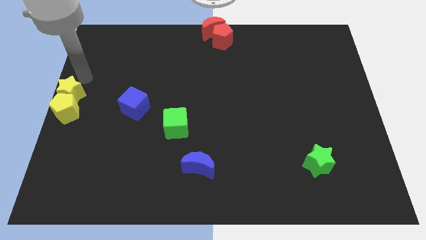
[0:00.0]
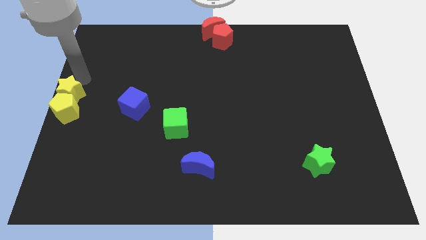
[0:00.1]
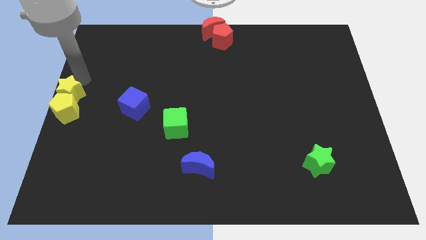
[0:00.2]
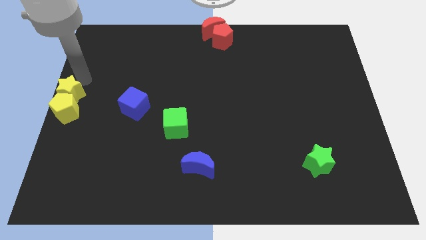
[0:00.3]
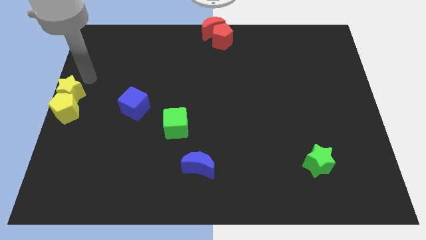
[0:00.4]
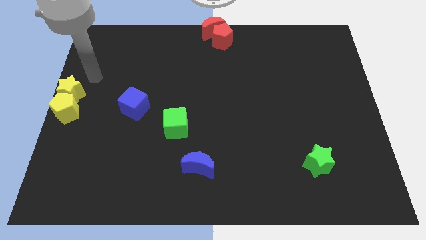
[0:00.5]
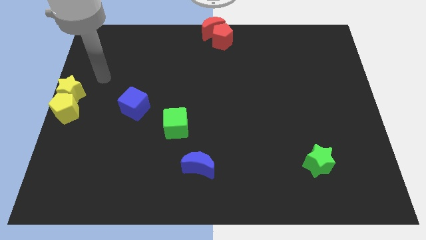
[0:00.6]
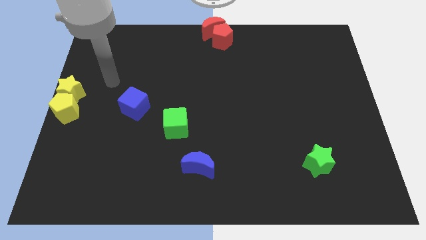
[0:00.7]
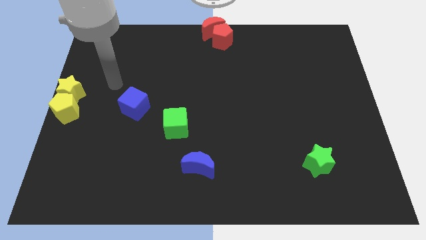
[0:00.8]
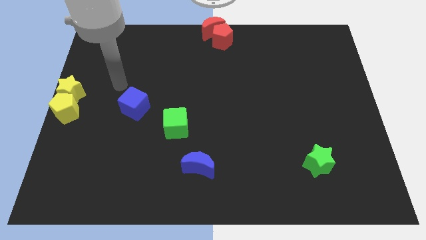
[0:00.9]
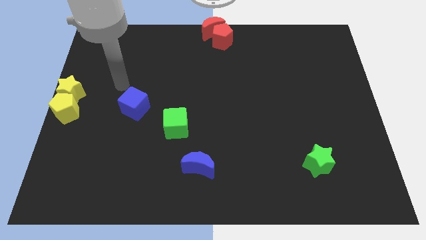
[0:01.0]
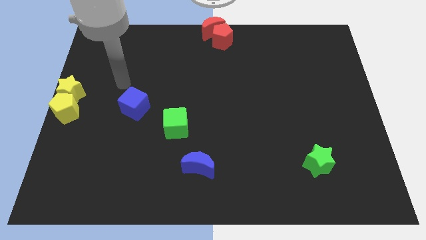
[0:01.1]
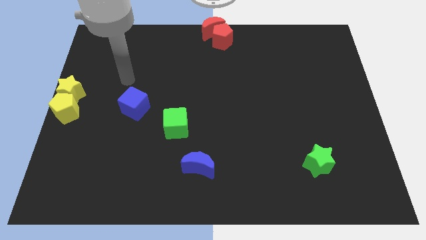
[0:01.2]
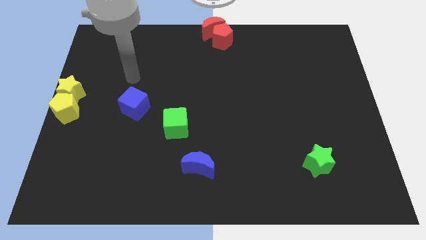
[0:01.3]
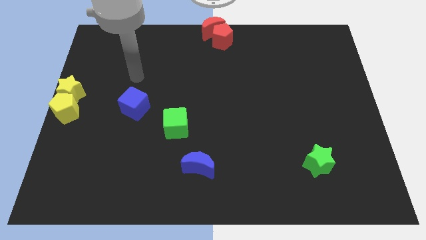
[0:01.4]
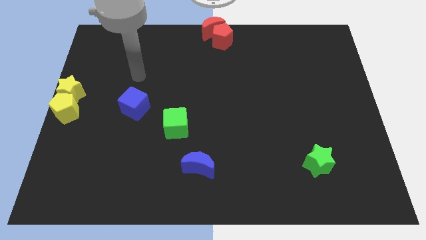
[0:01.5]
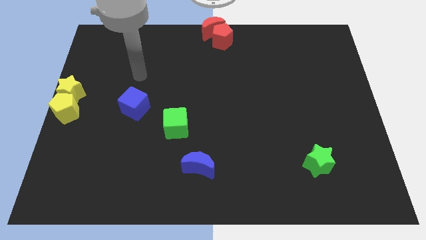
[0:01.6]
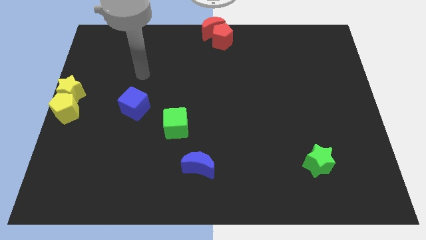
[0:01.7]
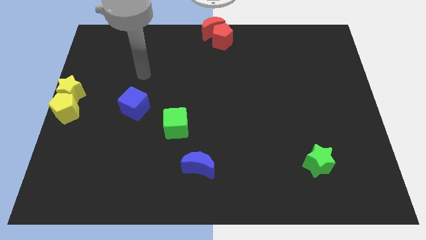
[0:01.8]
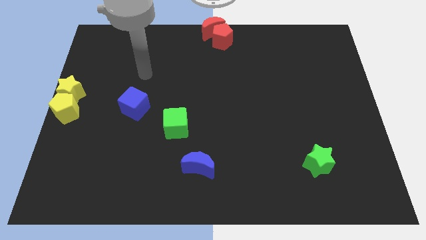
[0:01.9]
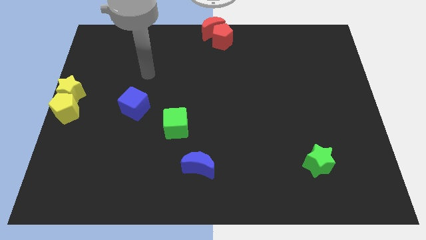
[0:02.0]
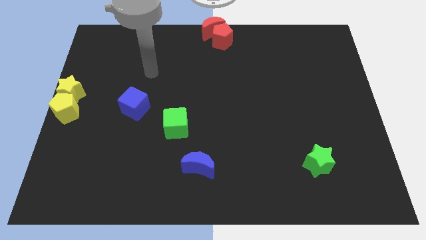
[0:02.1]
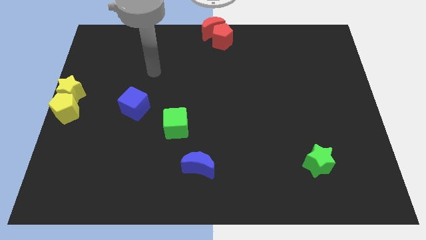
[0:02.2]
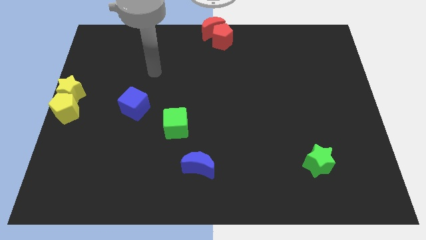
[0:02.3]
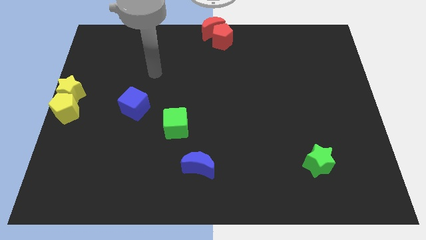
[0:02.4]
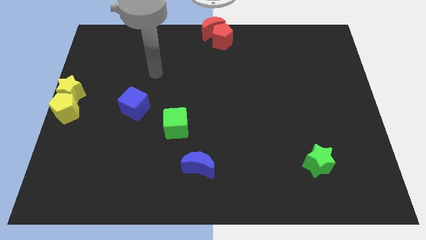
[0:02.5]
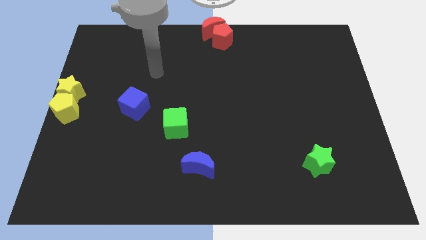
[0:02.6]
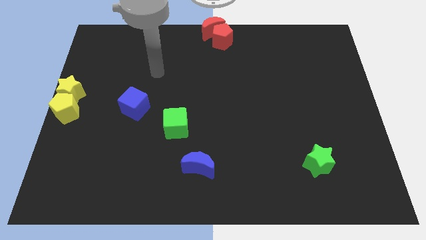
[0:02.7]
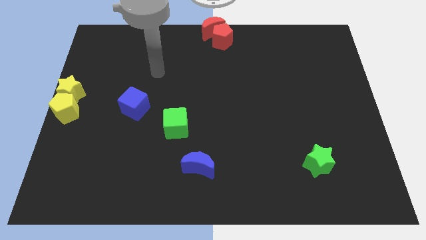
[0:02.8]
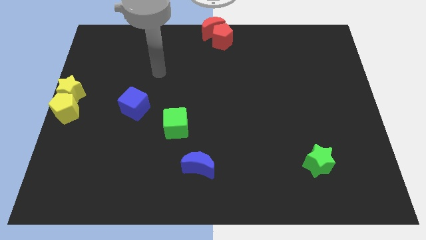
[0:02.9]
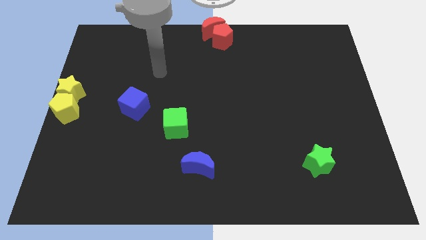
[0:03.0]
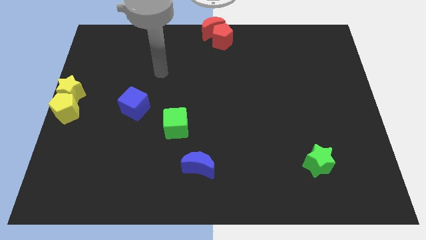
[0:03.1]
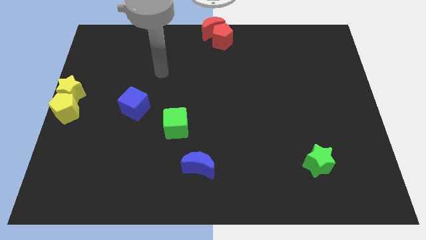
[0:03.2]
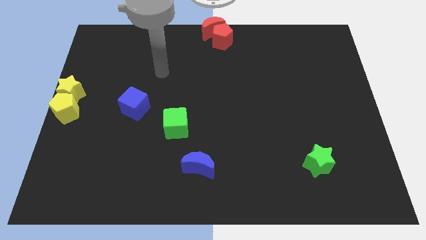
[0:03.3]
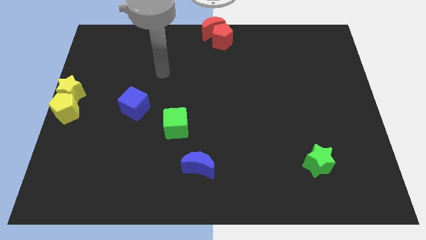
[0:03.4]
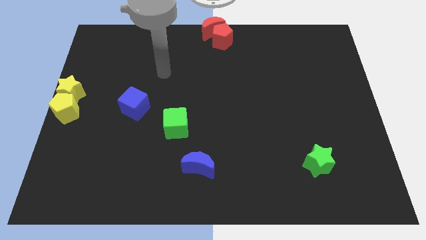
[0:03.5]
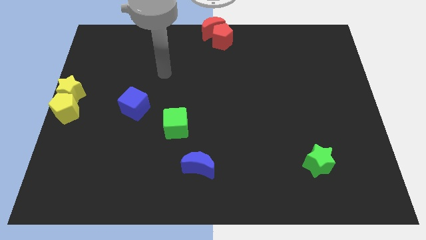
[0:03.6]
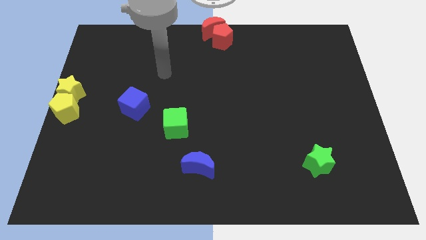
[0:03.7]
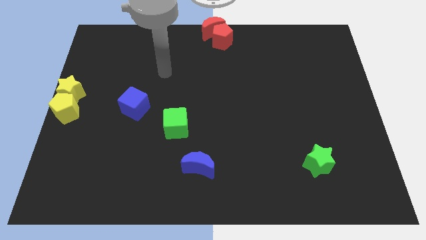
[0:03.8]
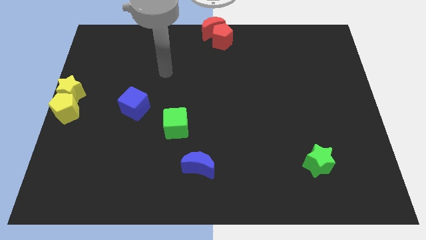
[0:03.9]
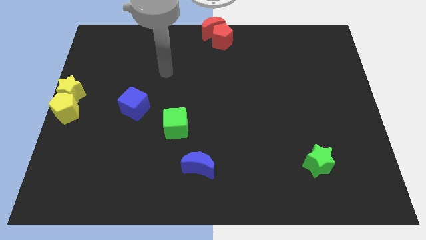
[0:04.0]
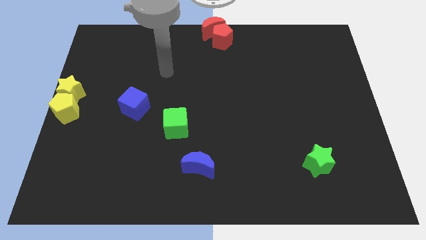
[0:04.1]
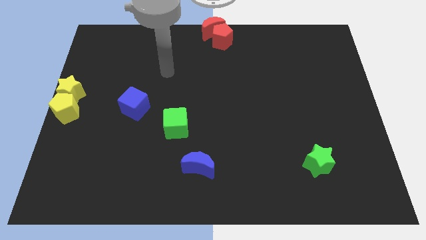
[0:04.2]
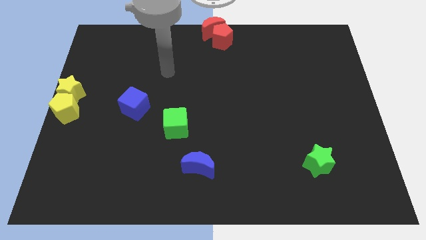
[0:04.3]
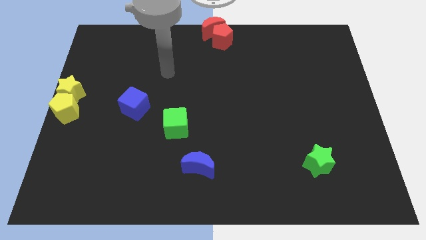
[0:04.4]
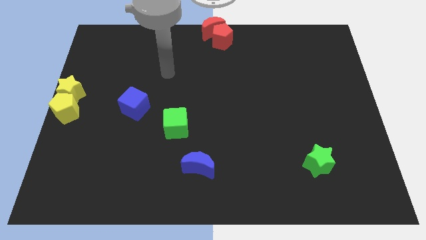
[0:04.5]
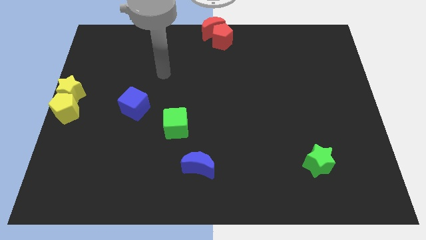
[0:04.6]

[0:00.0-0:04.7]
go away from the yellow star

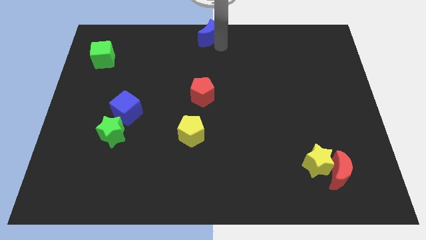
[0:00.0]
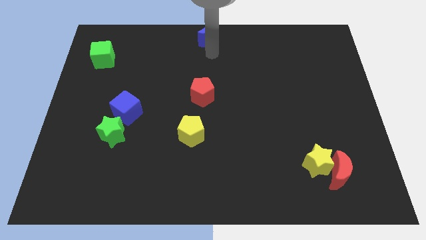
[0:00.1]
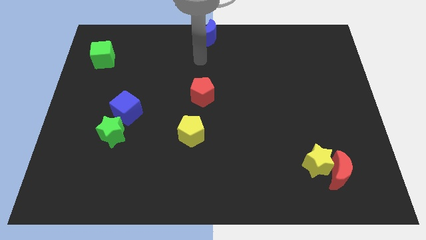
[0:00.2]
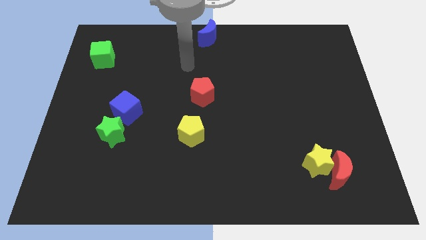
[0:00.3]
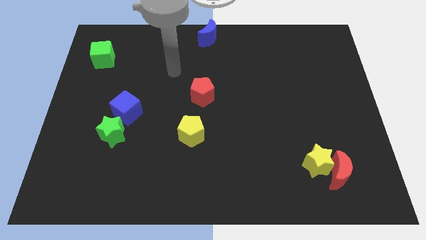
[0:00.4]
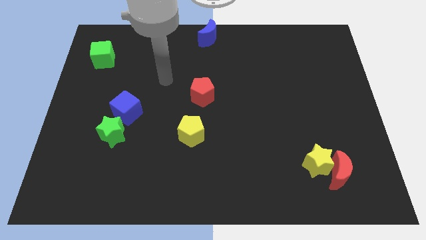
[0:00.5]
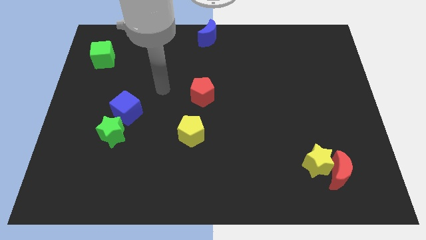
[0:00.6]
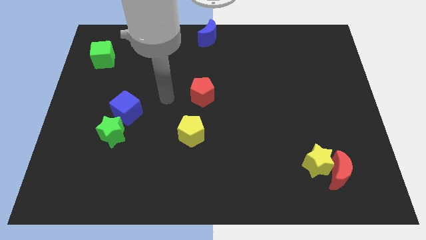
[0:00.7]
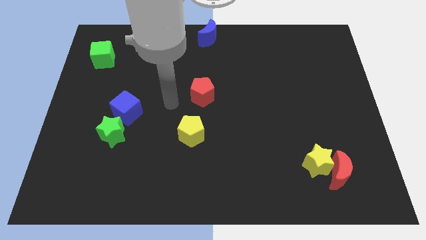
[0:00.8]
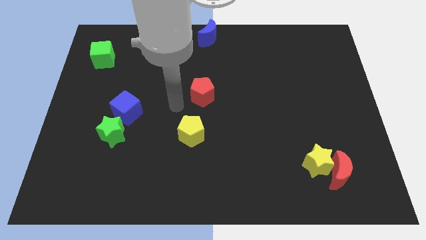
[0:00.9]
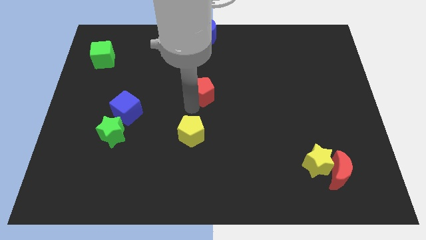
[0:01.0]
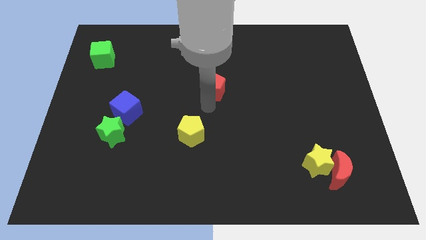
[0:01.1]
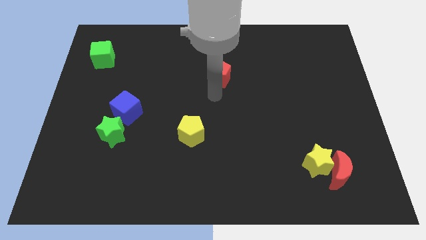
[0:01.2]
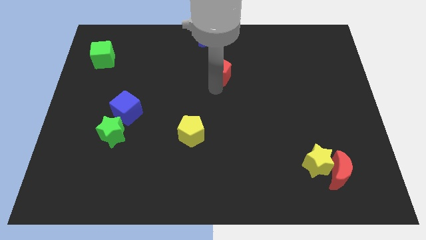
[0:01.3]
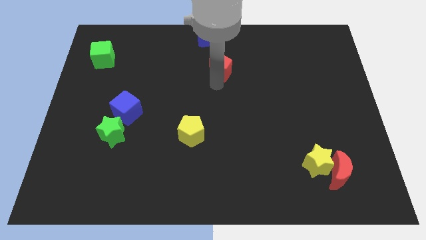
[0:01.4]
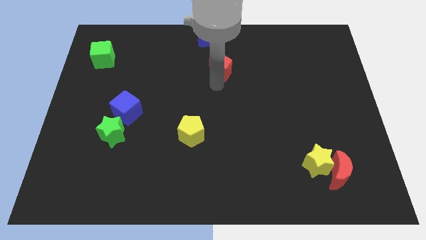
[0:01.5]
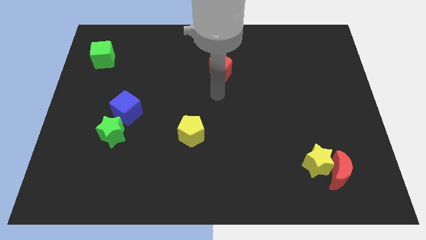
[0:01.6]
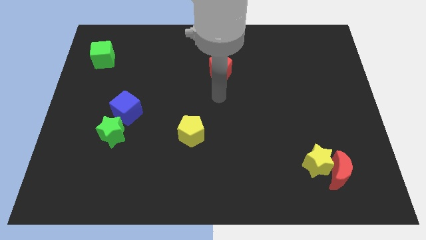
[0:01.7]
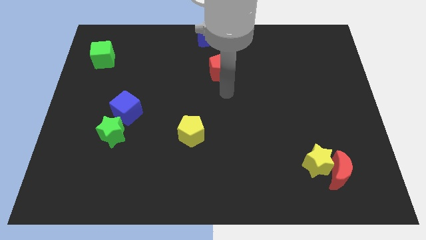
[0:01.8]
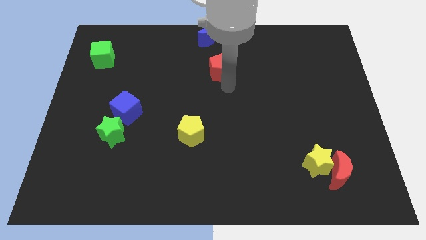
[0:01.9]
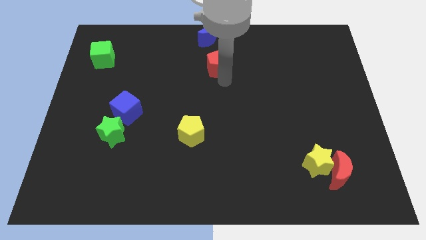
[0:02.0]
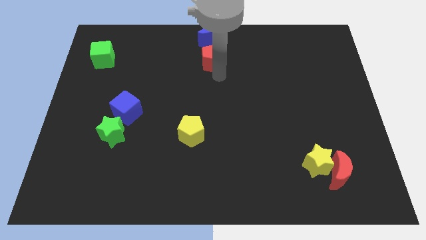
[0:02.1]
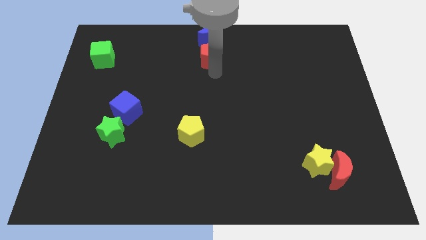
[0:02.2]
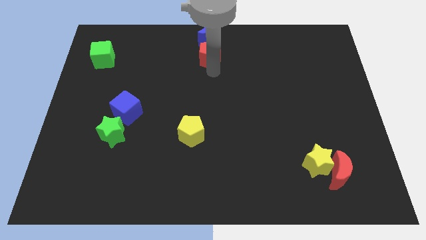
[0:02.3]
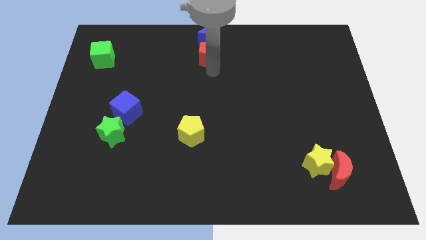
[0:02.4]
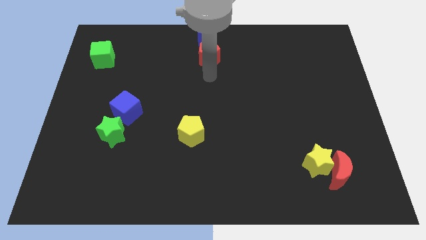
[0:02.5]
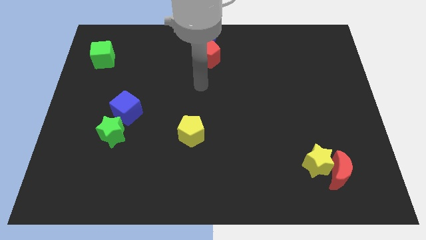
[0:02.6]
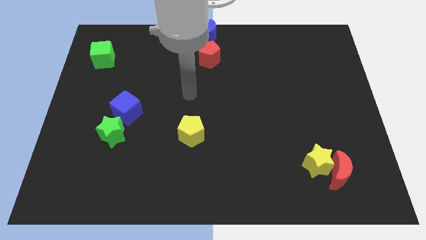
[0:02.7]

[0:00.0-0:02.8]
put the red pentagon below the blue crescent

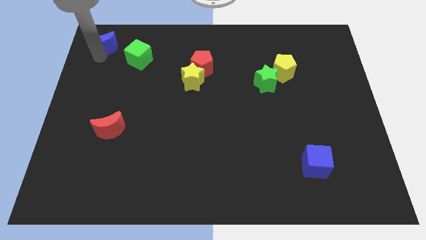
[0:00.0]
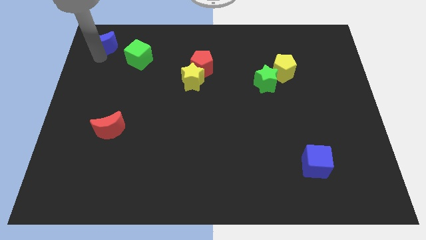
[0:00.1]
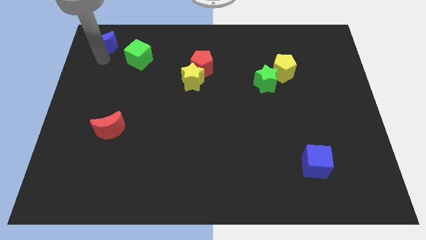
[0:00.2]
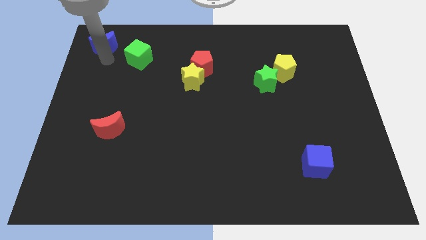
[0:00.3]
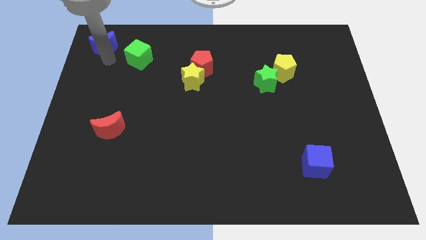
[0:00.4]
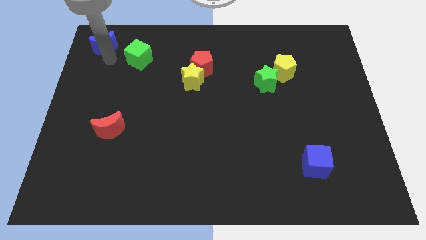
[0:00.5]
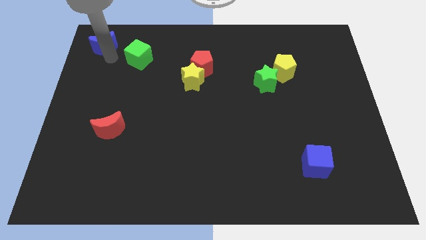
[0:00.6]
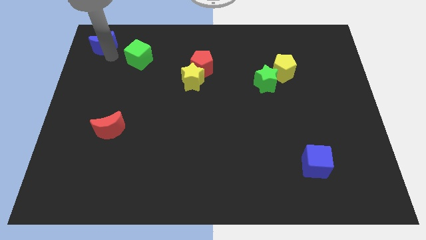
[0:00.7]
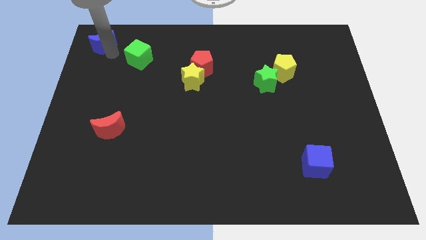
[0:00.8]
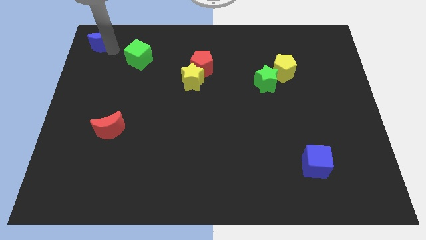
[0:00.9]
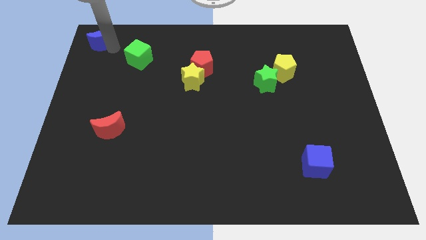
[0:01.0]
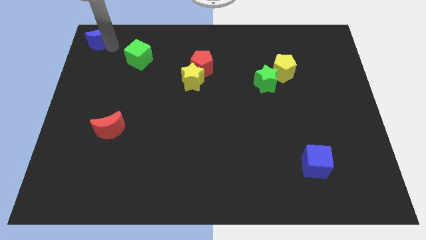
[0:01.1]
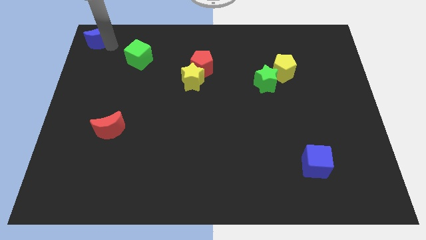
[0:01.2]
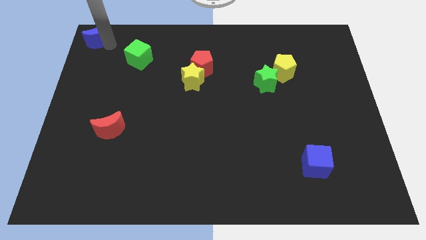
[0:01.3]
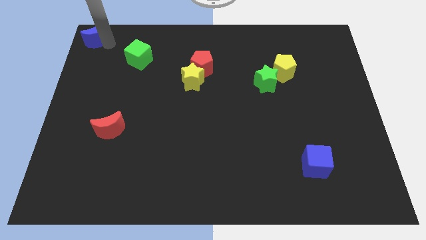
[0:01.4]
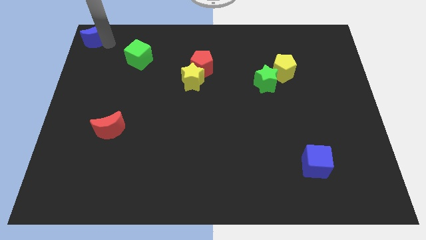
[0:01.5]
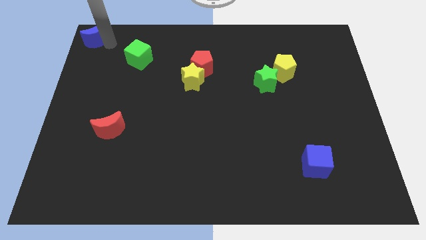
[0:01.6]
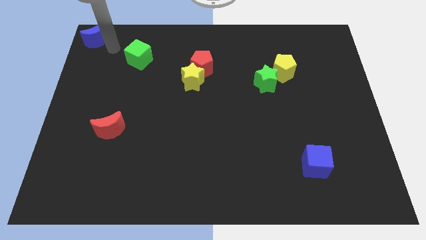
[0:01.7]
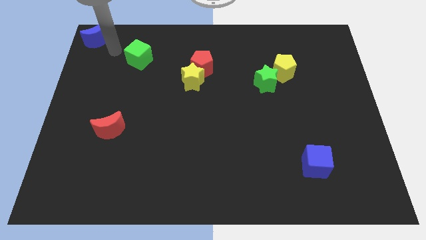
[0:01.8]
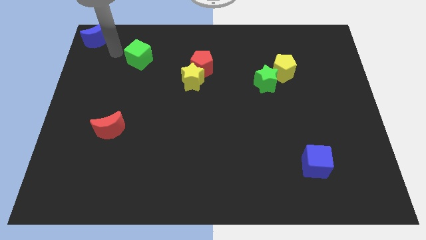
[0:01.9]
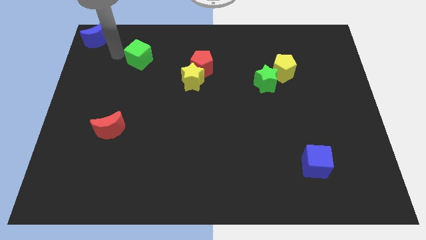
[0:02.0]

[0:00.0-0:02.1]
push the blue moon to the top left corner of the board
